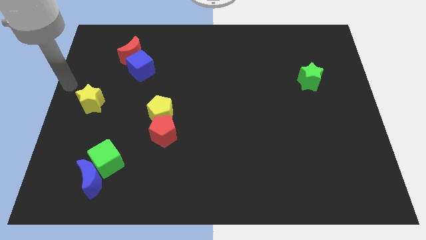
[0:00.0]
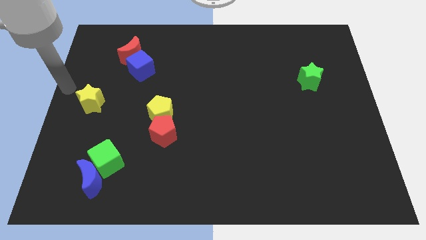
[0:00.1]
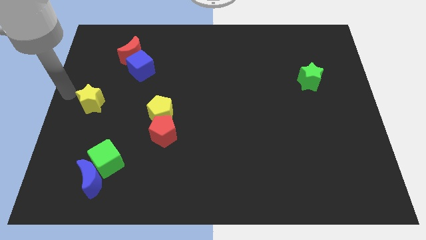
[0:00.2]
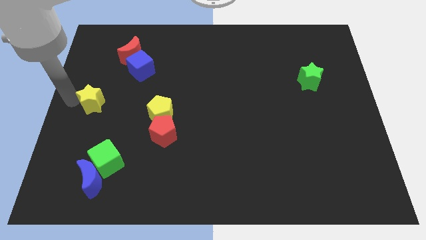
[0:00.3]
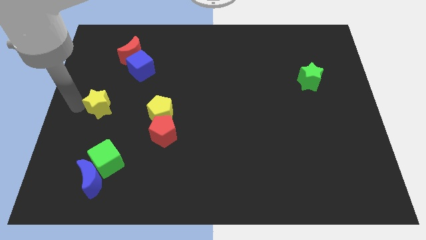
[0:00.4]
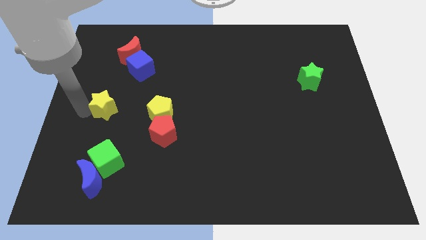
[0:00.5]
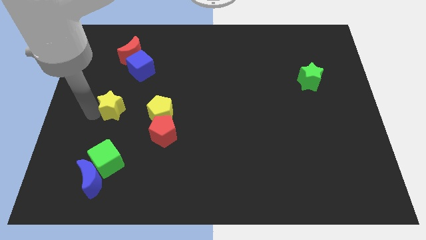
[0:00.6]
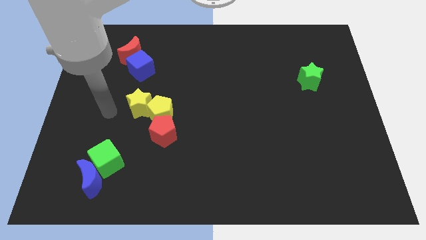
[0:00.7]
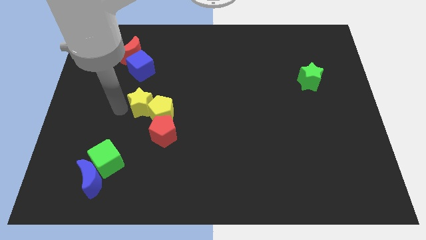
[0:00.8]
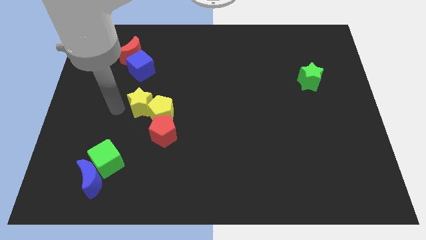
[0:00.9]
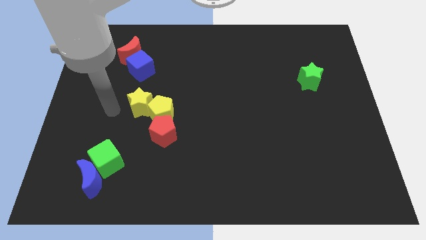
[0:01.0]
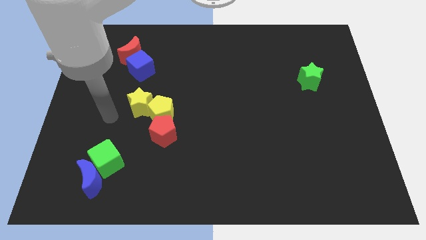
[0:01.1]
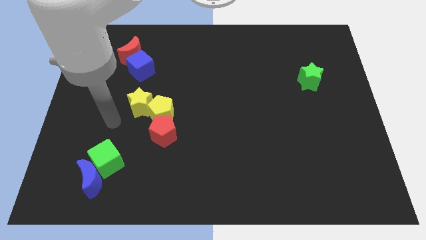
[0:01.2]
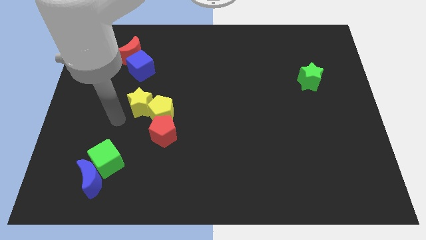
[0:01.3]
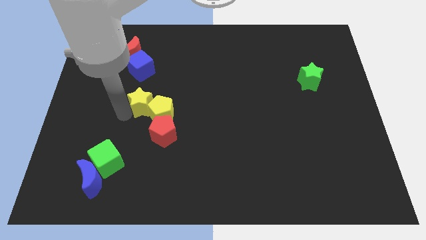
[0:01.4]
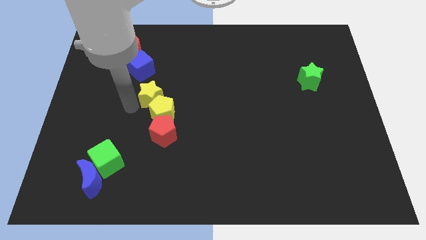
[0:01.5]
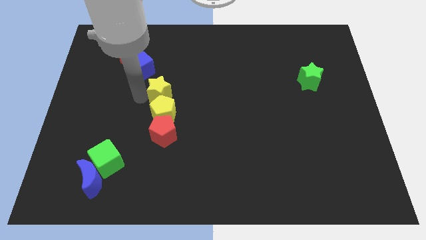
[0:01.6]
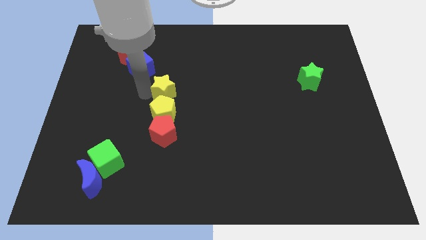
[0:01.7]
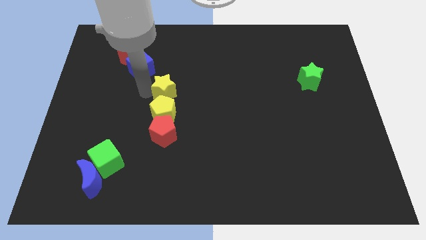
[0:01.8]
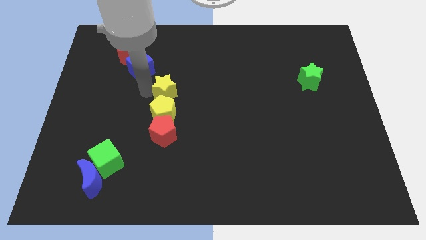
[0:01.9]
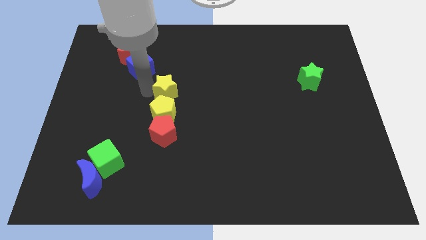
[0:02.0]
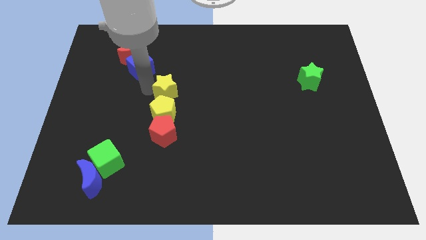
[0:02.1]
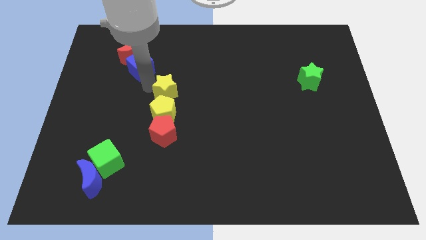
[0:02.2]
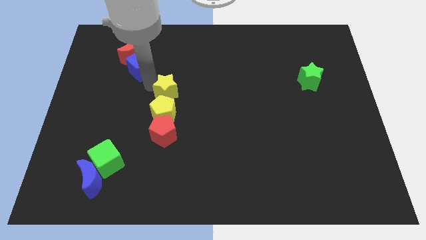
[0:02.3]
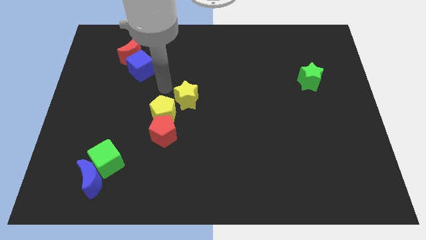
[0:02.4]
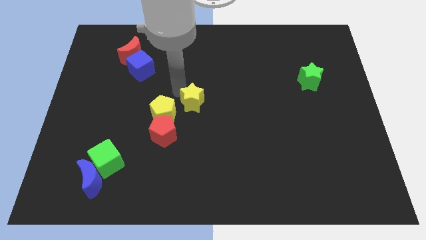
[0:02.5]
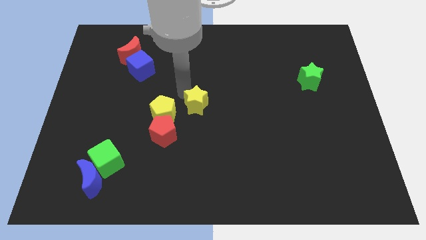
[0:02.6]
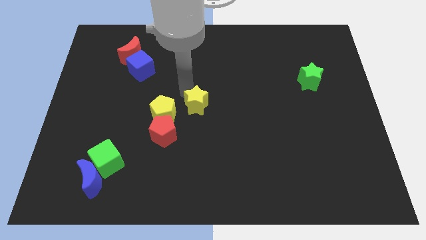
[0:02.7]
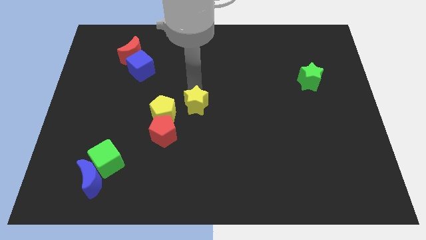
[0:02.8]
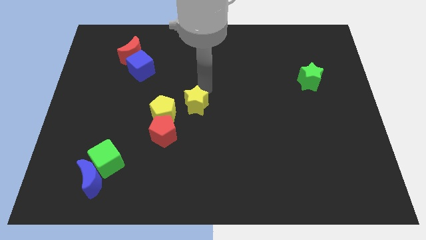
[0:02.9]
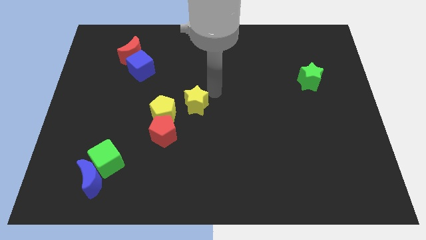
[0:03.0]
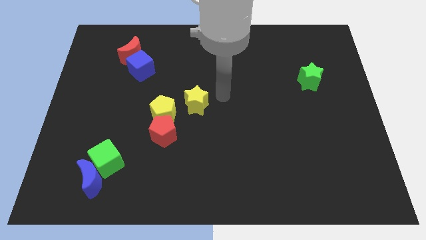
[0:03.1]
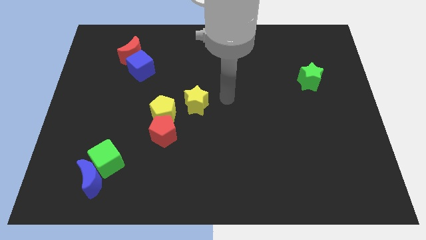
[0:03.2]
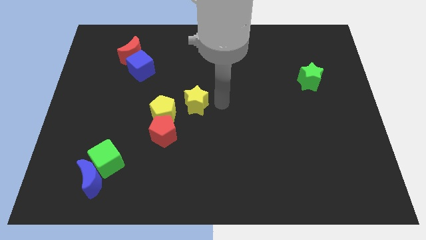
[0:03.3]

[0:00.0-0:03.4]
push the yellow star over the yellow pentagon

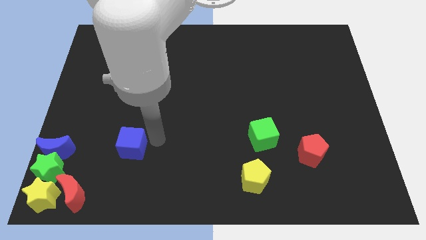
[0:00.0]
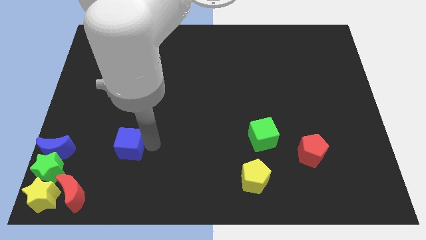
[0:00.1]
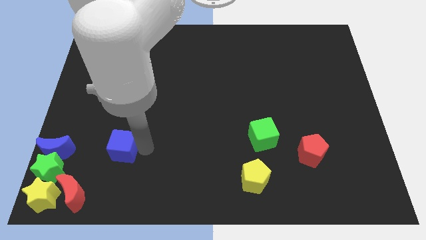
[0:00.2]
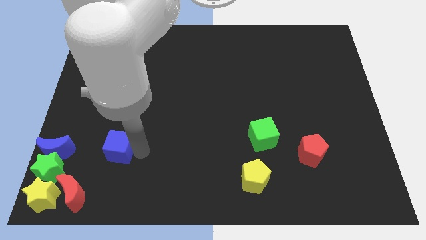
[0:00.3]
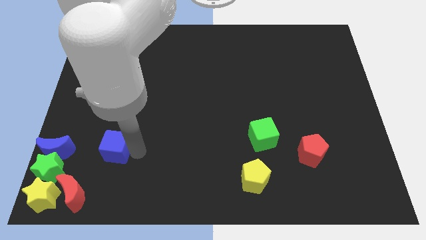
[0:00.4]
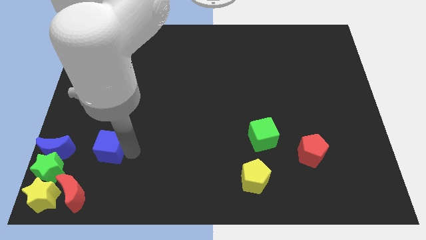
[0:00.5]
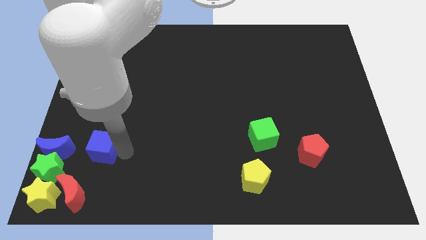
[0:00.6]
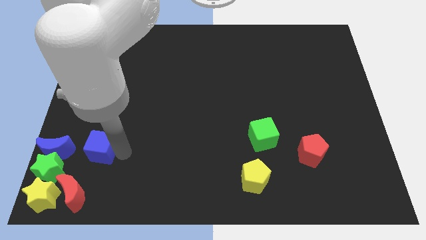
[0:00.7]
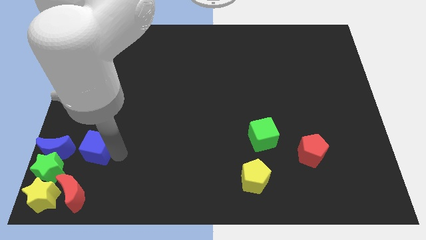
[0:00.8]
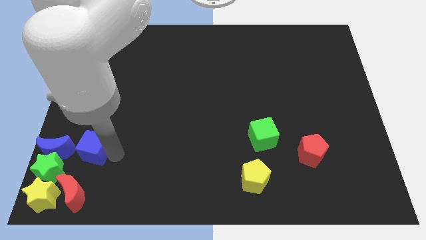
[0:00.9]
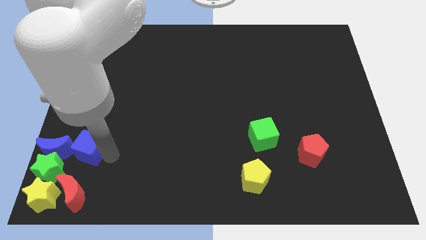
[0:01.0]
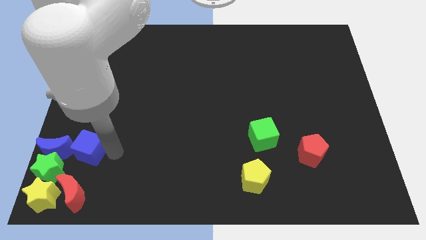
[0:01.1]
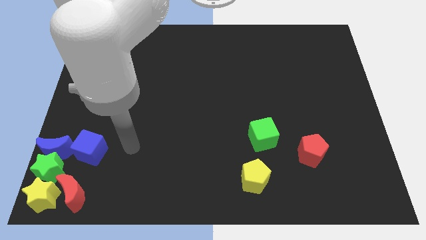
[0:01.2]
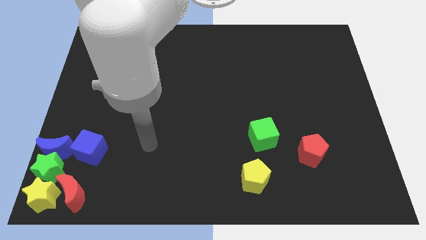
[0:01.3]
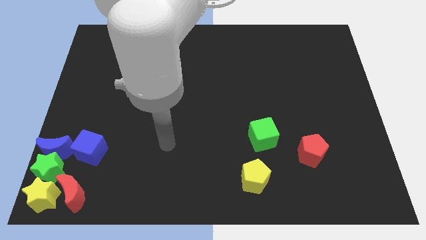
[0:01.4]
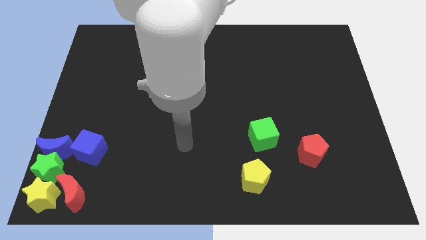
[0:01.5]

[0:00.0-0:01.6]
push the blue cube close to the blue moon

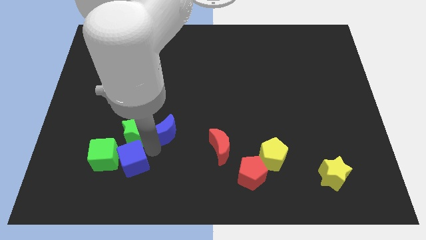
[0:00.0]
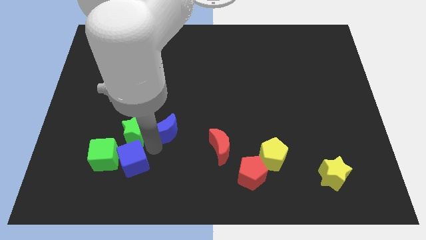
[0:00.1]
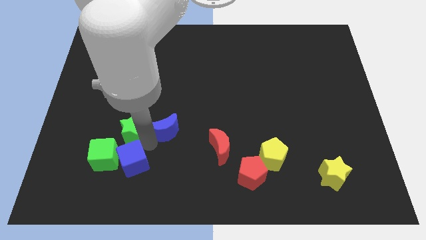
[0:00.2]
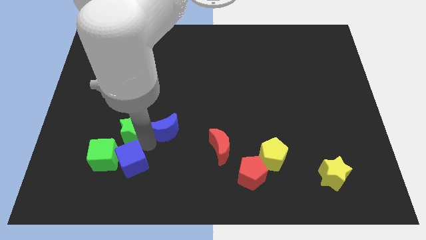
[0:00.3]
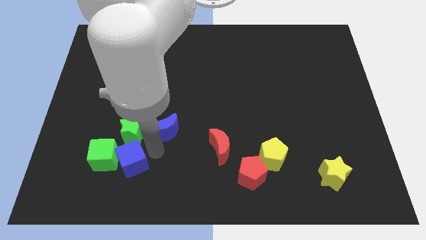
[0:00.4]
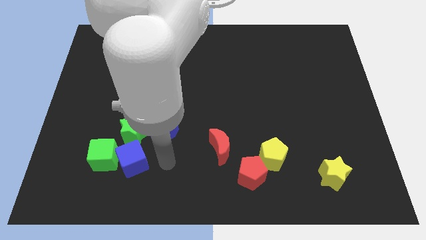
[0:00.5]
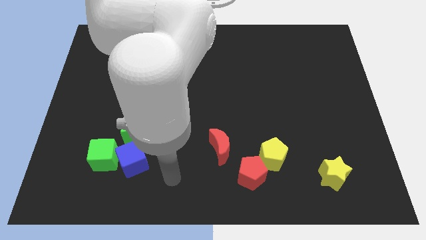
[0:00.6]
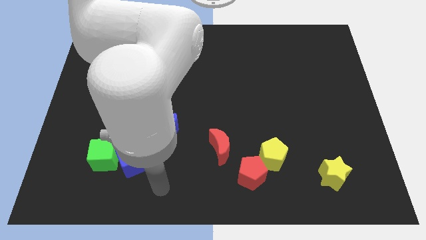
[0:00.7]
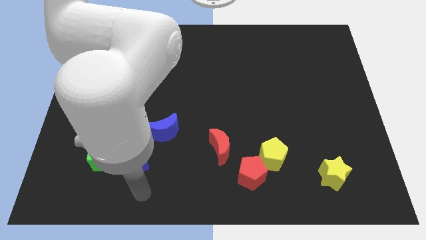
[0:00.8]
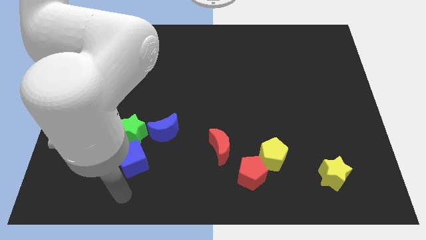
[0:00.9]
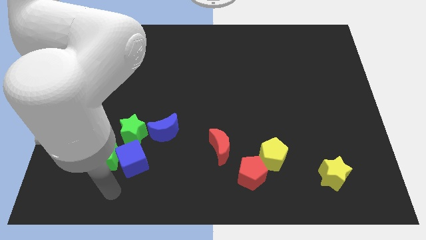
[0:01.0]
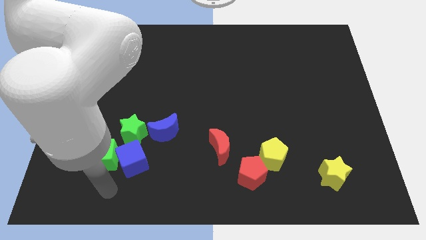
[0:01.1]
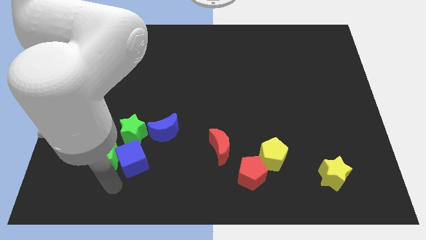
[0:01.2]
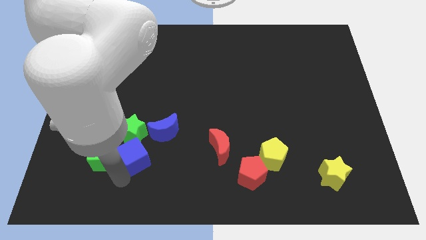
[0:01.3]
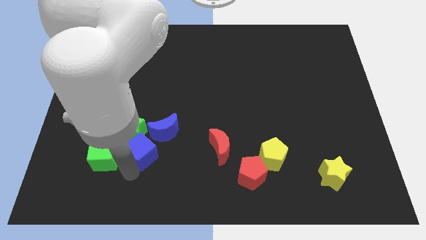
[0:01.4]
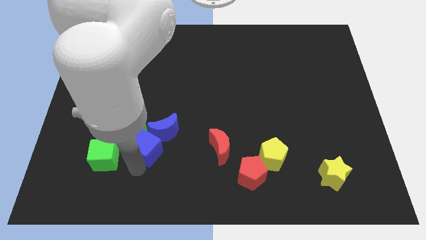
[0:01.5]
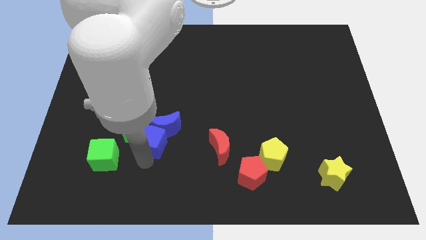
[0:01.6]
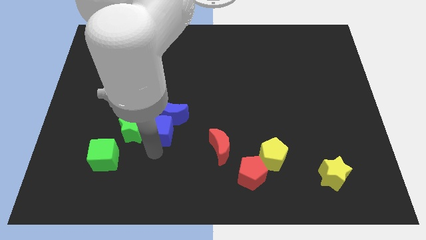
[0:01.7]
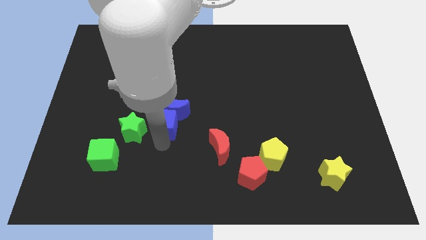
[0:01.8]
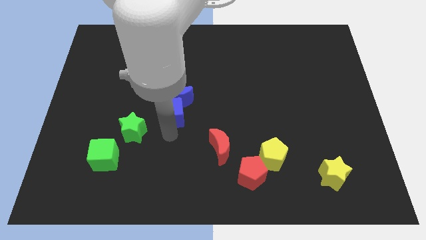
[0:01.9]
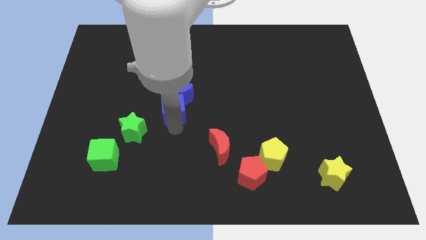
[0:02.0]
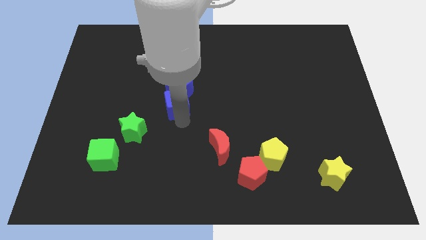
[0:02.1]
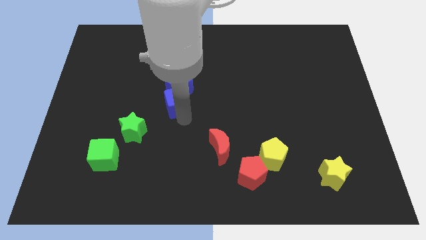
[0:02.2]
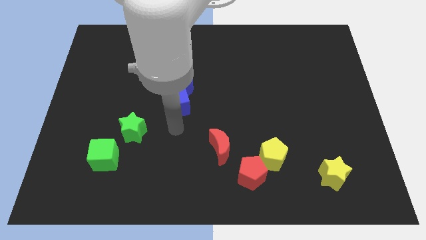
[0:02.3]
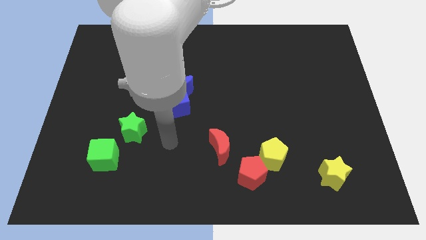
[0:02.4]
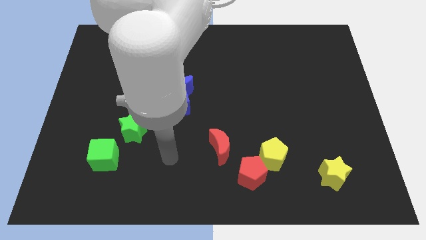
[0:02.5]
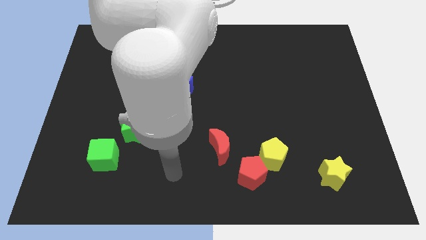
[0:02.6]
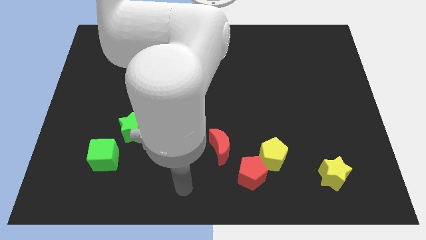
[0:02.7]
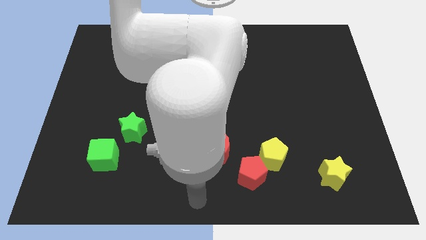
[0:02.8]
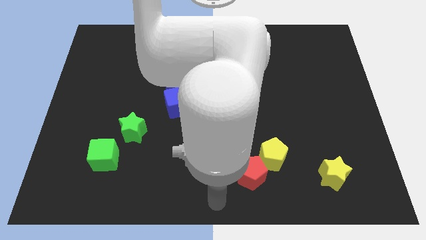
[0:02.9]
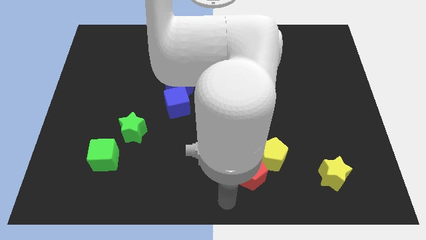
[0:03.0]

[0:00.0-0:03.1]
place the blue cube and blue crescent together at the top right of the green star

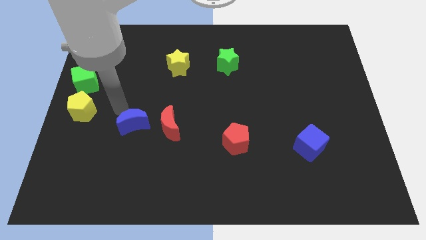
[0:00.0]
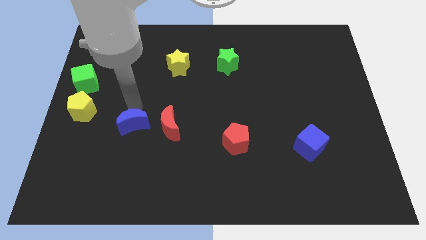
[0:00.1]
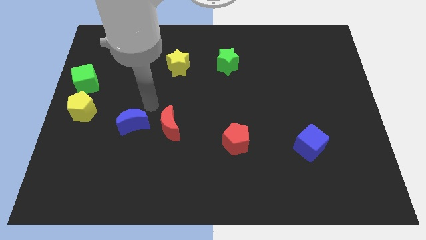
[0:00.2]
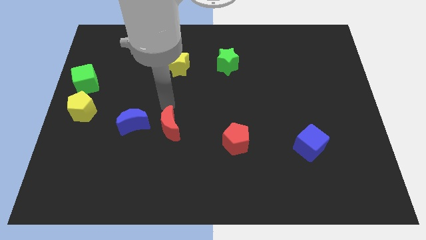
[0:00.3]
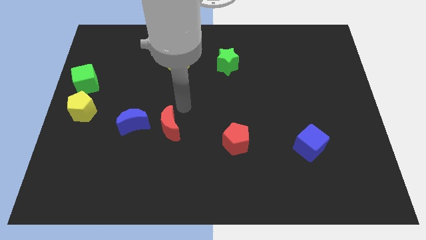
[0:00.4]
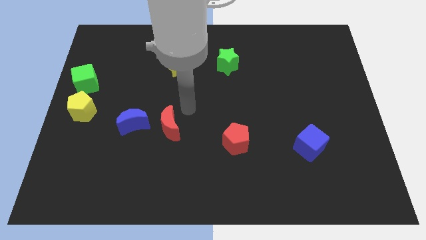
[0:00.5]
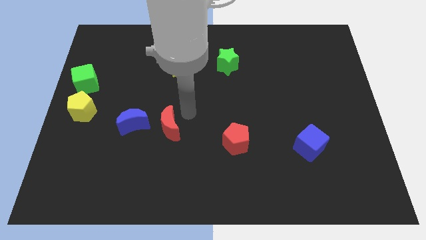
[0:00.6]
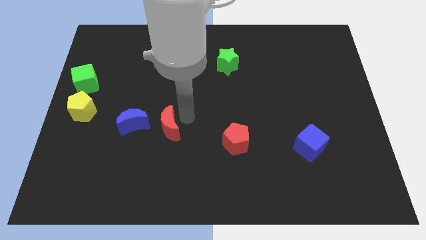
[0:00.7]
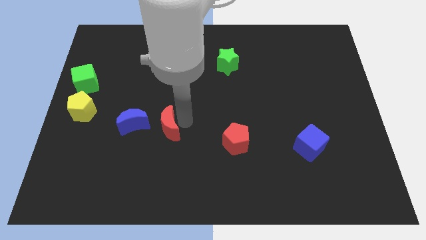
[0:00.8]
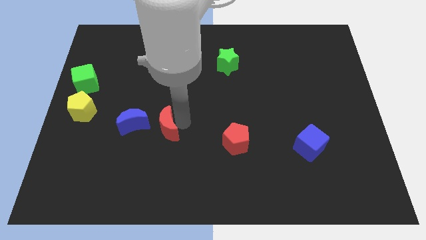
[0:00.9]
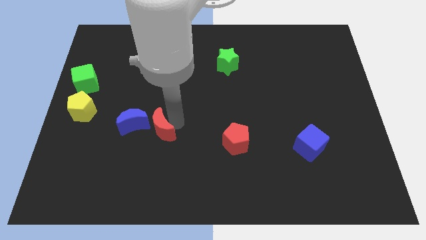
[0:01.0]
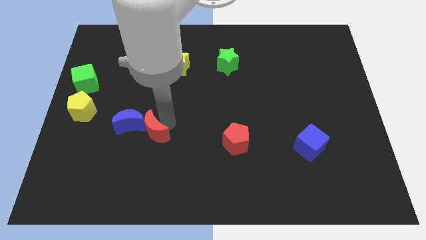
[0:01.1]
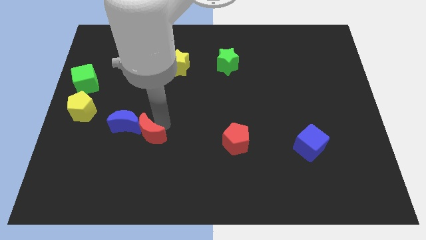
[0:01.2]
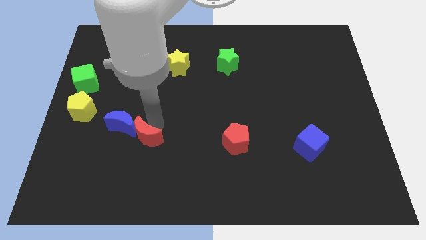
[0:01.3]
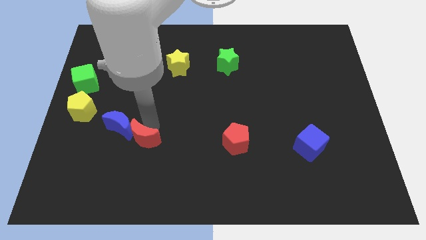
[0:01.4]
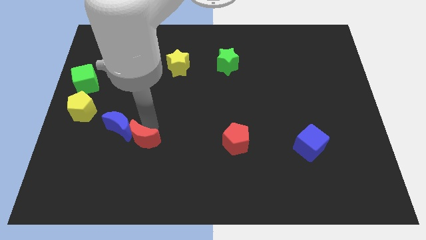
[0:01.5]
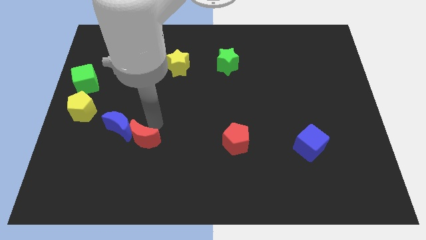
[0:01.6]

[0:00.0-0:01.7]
push red moon in to blue moon
